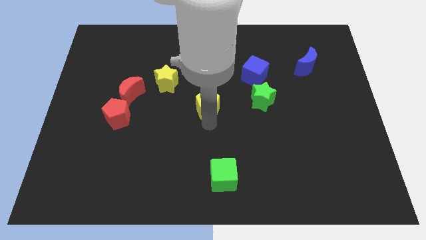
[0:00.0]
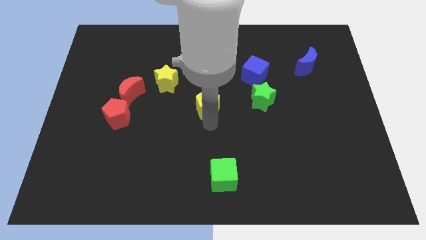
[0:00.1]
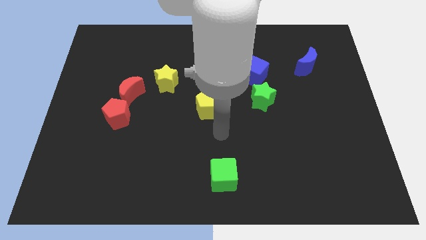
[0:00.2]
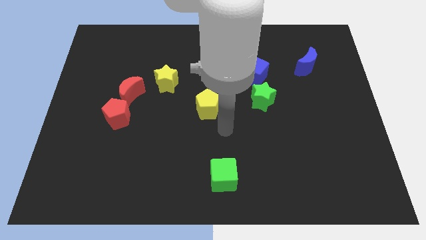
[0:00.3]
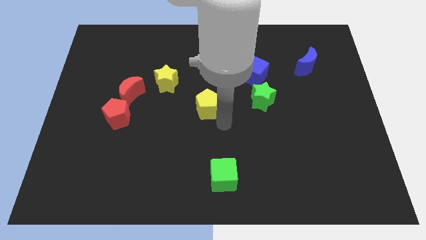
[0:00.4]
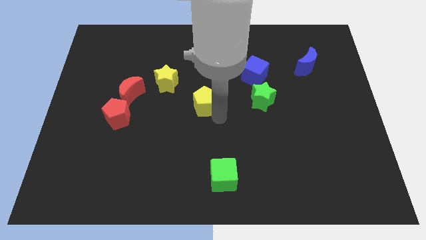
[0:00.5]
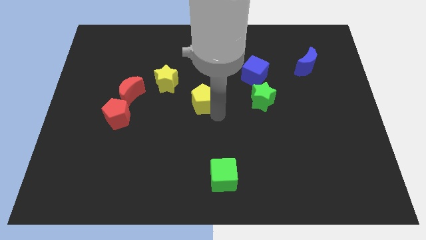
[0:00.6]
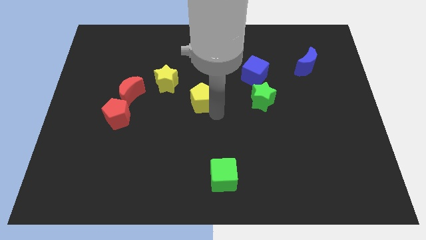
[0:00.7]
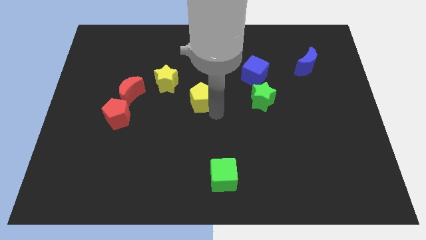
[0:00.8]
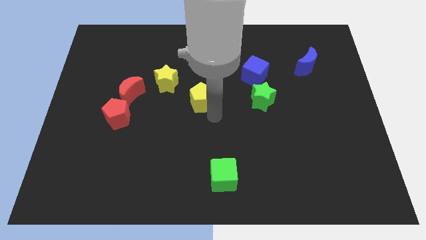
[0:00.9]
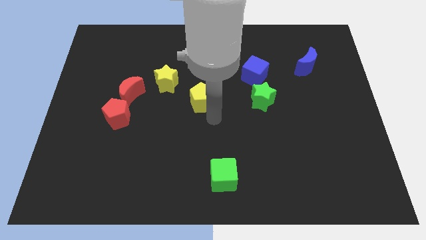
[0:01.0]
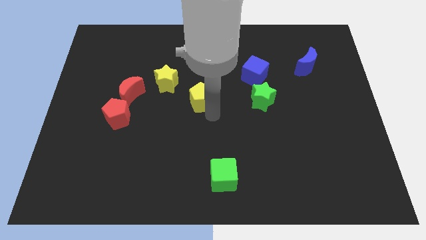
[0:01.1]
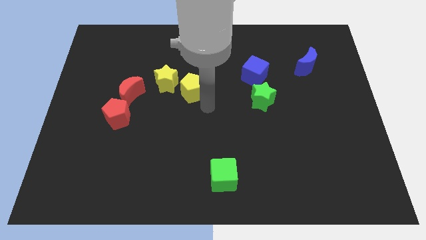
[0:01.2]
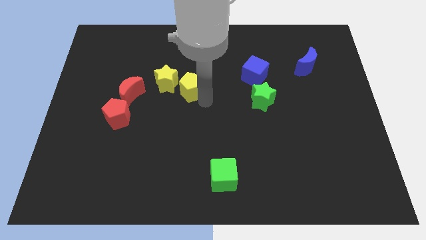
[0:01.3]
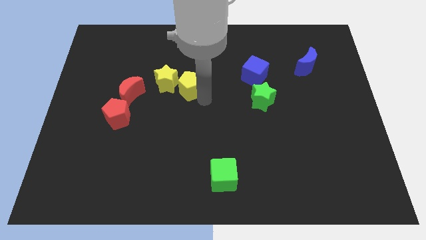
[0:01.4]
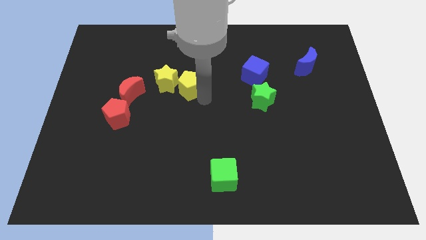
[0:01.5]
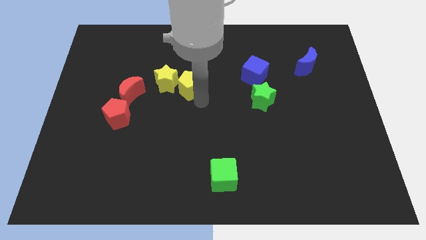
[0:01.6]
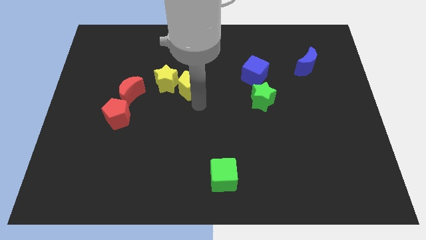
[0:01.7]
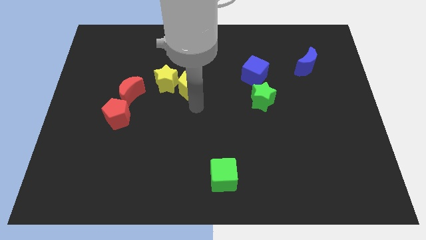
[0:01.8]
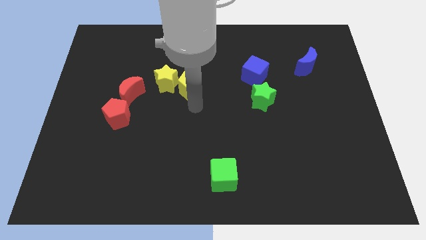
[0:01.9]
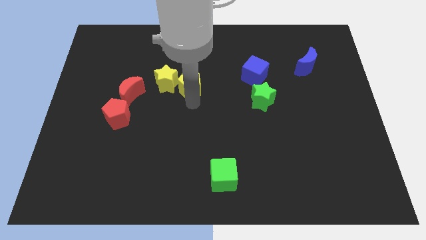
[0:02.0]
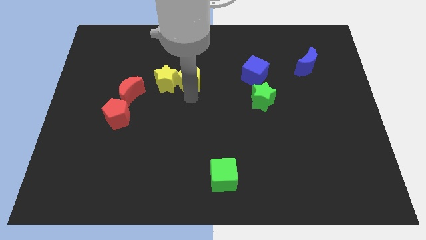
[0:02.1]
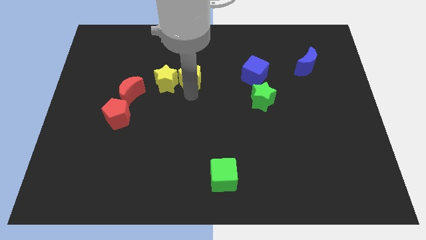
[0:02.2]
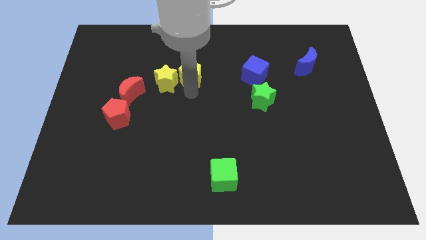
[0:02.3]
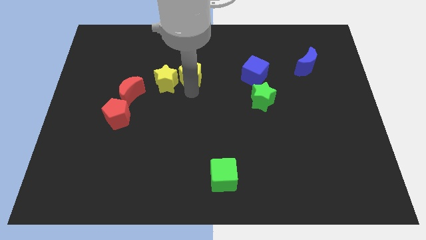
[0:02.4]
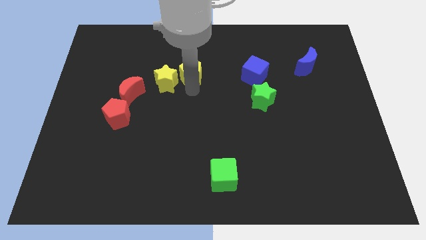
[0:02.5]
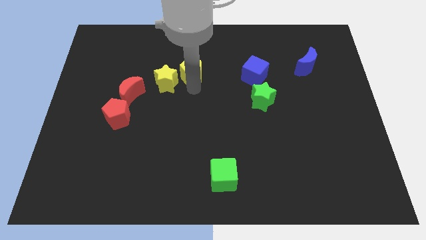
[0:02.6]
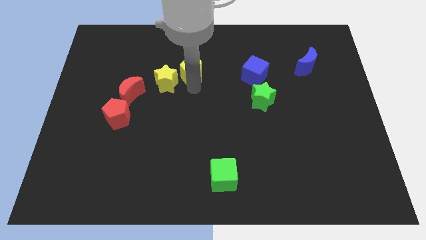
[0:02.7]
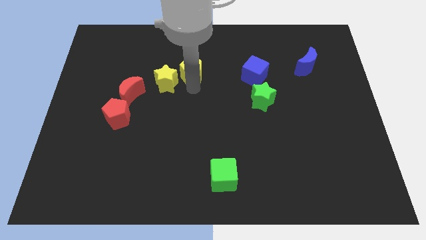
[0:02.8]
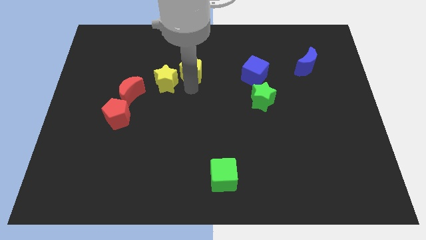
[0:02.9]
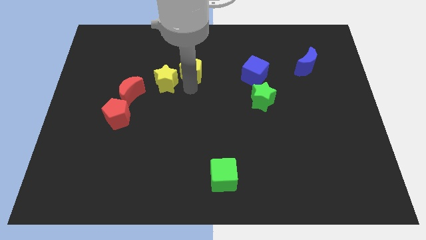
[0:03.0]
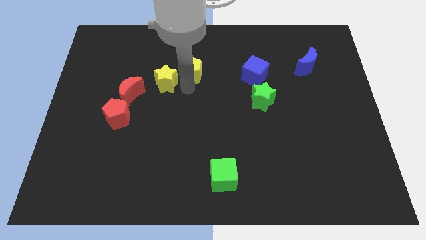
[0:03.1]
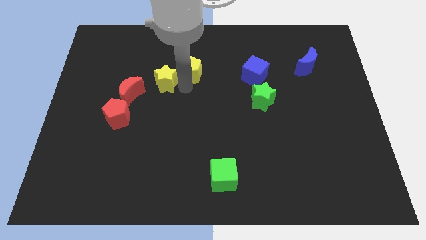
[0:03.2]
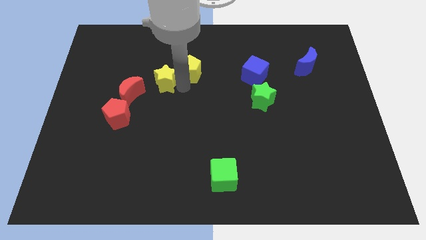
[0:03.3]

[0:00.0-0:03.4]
put the yellow pentagon to the top right side of the yellow star

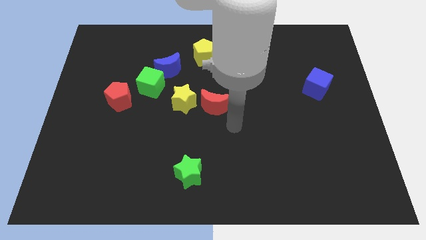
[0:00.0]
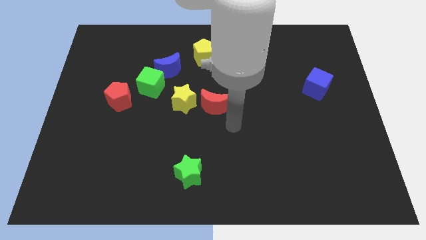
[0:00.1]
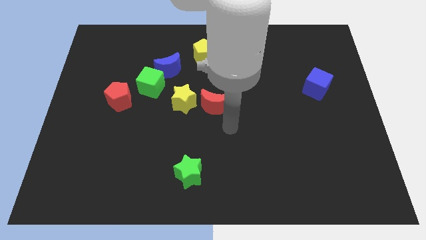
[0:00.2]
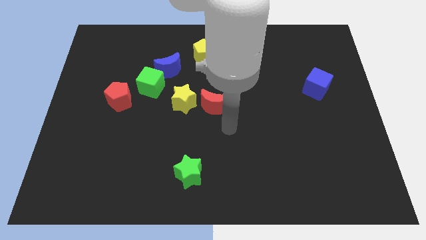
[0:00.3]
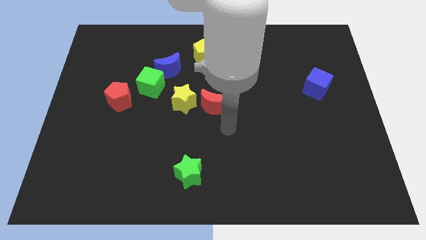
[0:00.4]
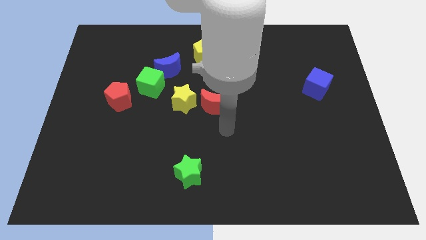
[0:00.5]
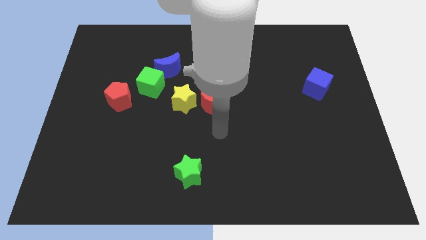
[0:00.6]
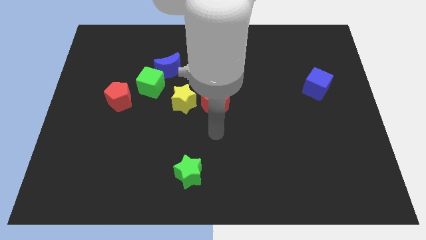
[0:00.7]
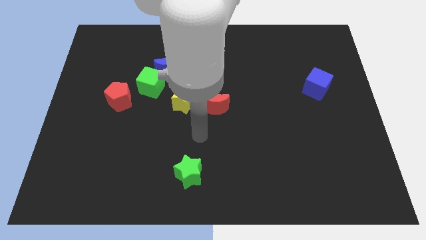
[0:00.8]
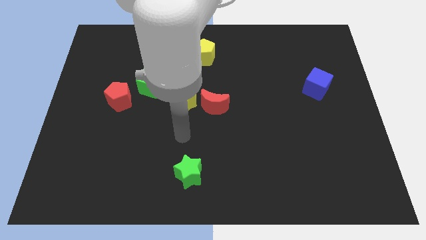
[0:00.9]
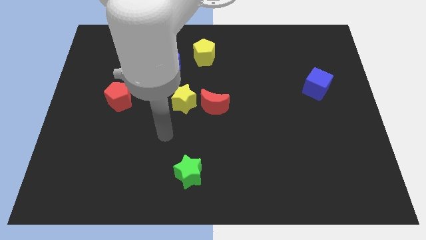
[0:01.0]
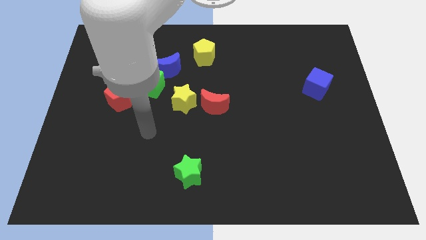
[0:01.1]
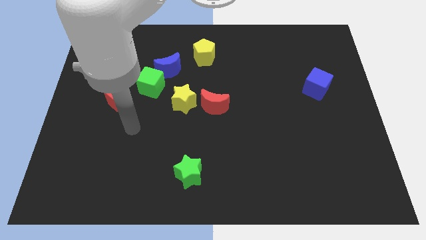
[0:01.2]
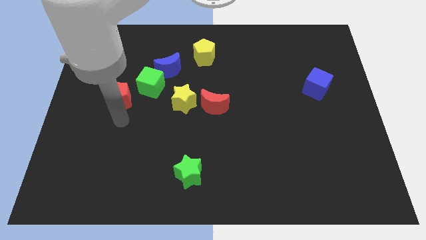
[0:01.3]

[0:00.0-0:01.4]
move your arm from red moon to red pentagon

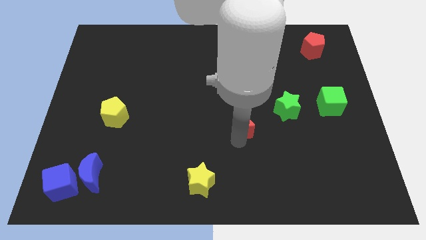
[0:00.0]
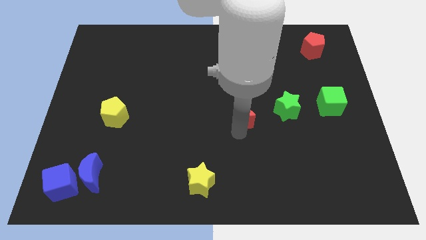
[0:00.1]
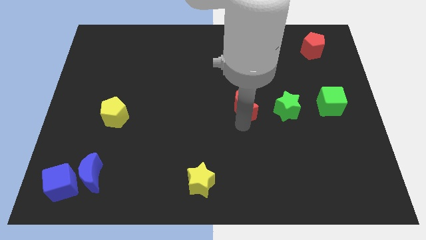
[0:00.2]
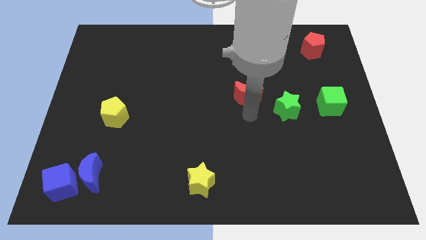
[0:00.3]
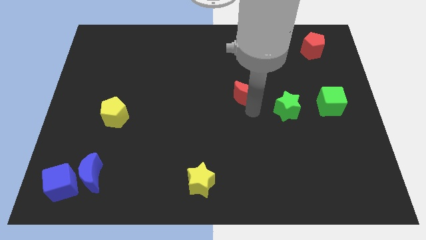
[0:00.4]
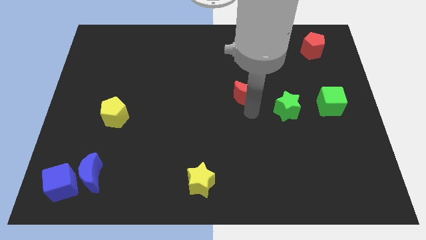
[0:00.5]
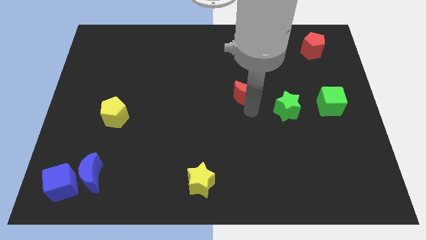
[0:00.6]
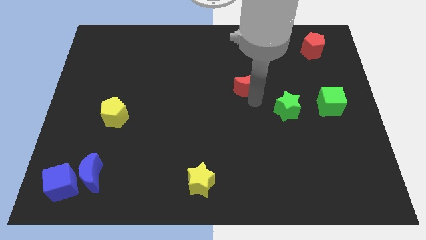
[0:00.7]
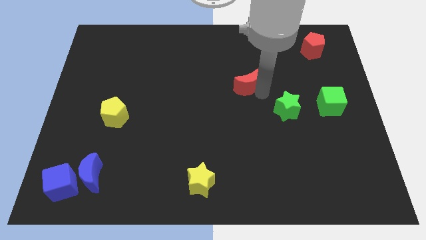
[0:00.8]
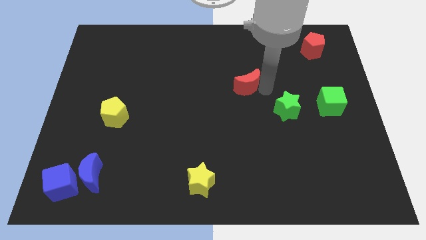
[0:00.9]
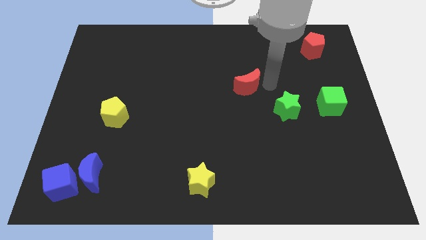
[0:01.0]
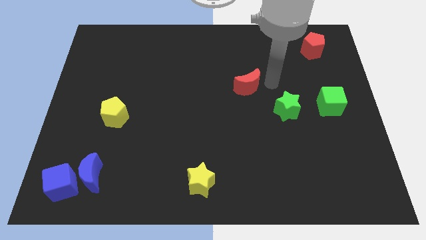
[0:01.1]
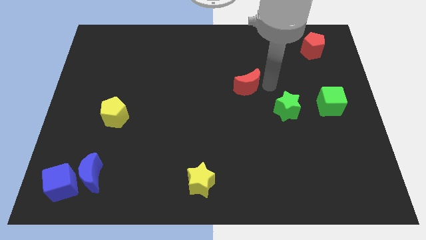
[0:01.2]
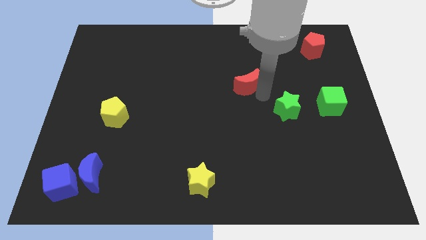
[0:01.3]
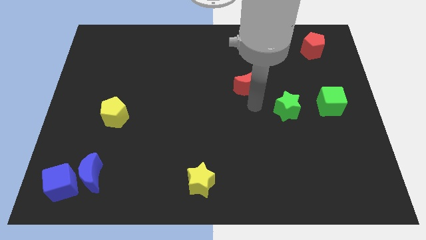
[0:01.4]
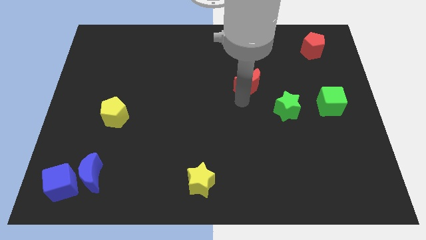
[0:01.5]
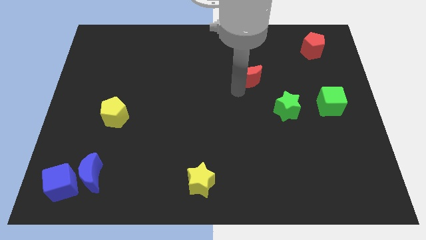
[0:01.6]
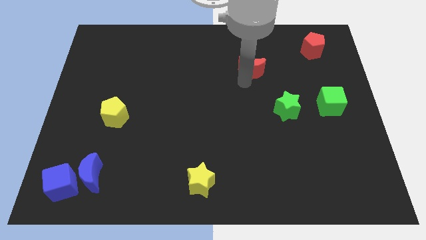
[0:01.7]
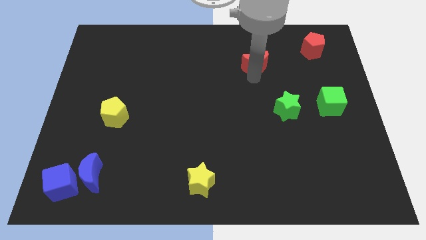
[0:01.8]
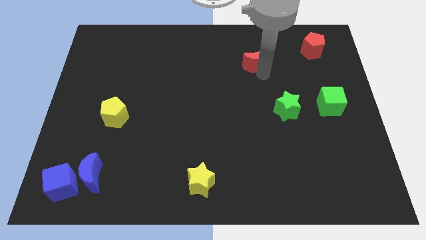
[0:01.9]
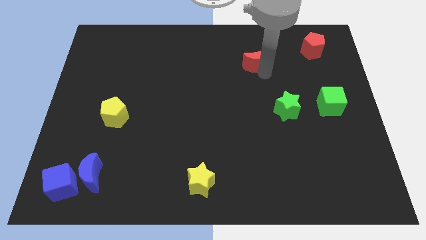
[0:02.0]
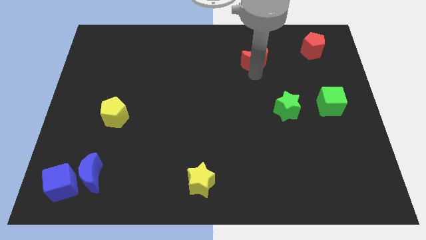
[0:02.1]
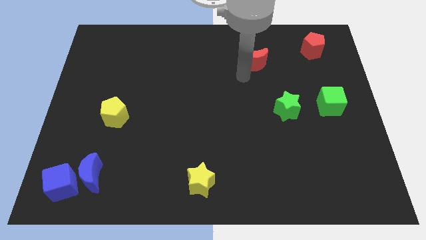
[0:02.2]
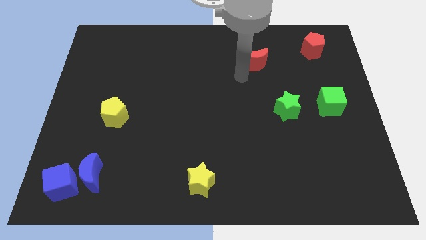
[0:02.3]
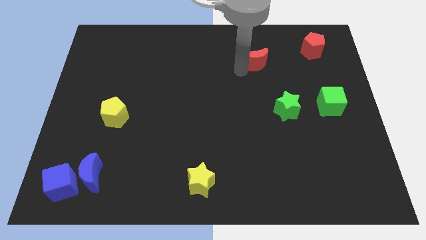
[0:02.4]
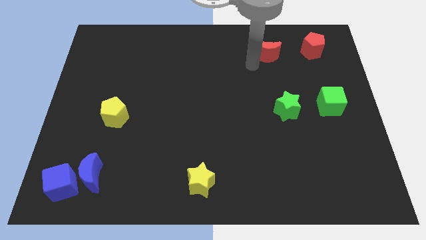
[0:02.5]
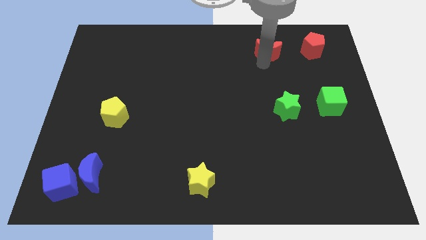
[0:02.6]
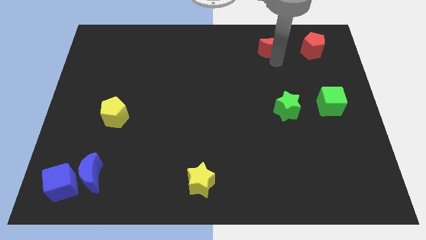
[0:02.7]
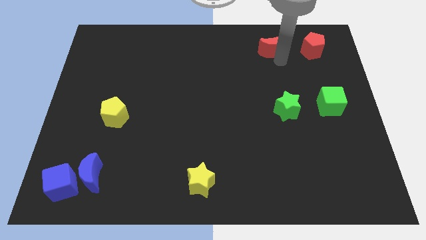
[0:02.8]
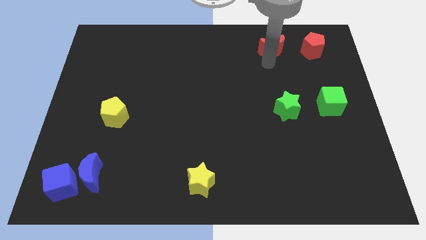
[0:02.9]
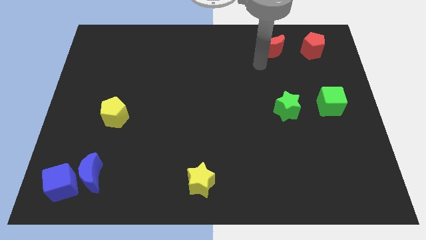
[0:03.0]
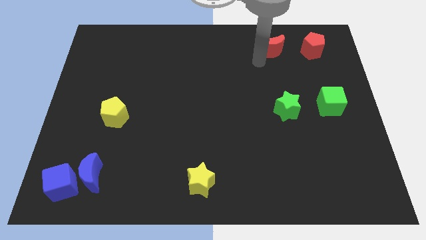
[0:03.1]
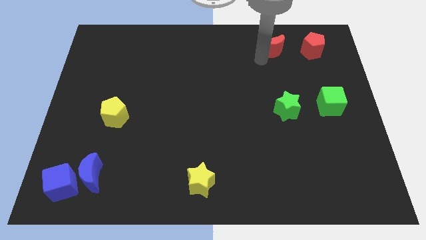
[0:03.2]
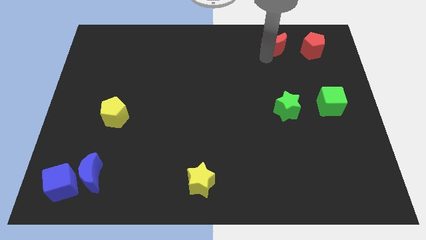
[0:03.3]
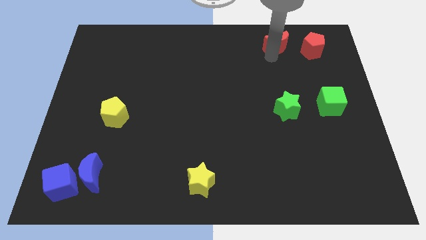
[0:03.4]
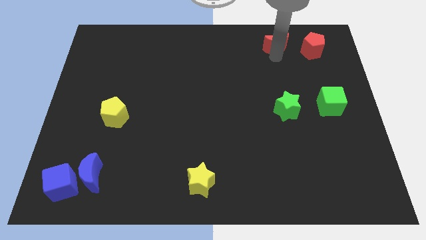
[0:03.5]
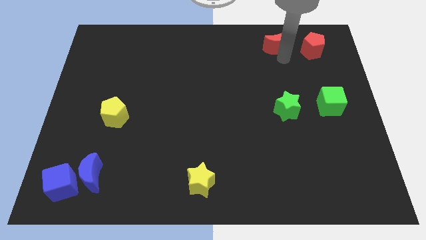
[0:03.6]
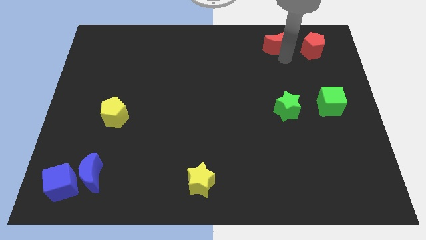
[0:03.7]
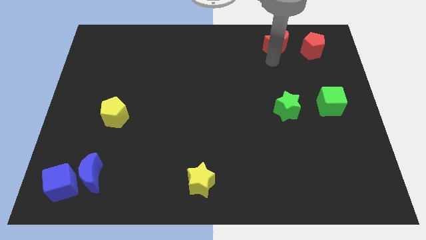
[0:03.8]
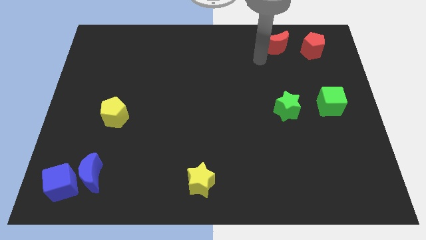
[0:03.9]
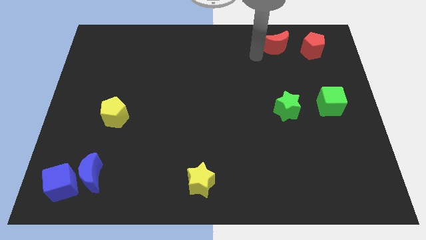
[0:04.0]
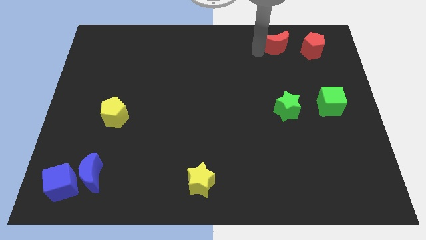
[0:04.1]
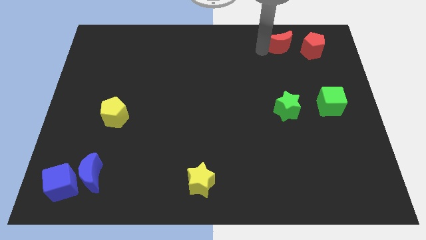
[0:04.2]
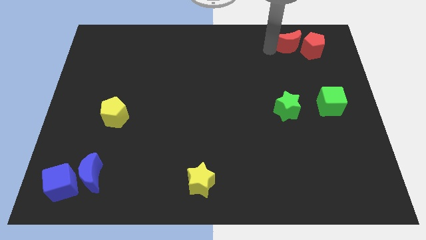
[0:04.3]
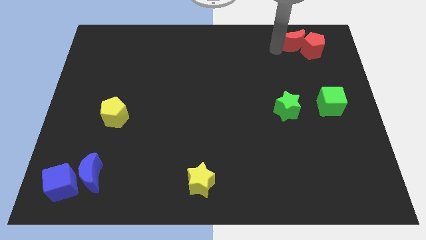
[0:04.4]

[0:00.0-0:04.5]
move the red moon close to the red pentagon
